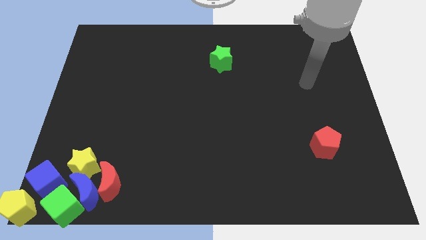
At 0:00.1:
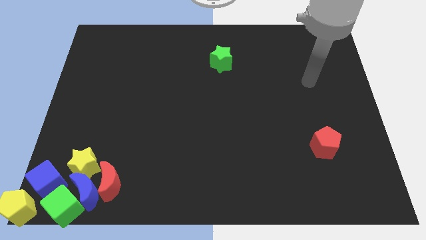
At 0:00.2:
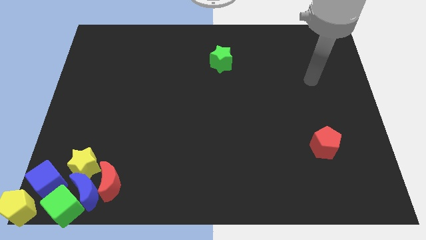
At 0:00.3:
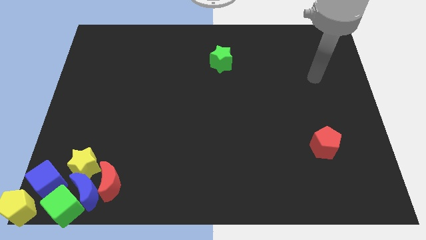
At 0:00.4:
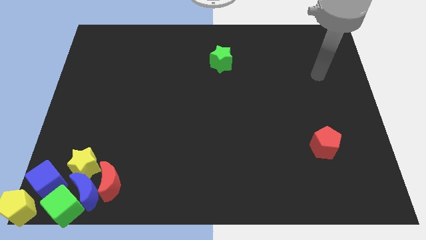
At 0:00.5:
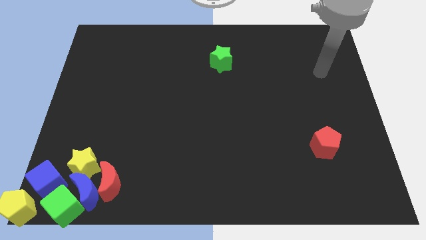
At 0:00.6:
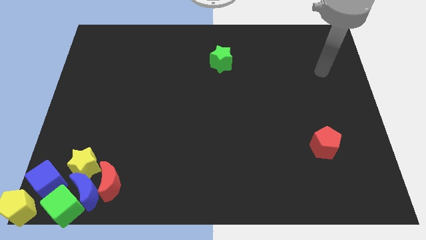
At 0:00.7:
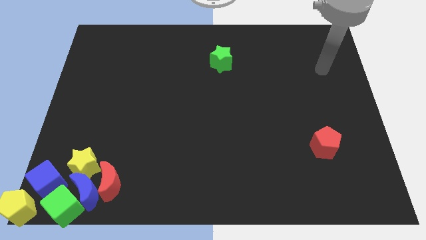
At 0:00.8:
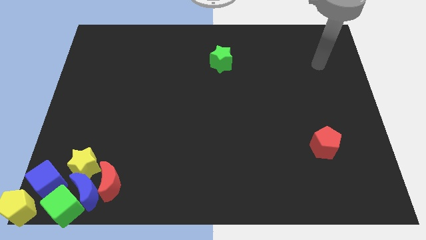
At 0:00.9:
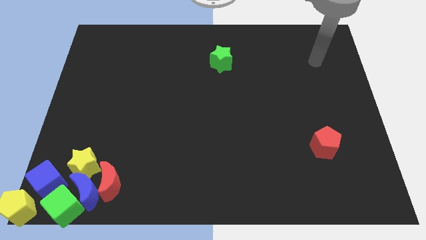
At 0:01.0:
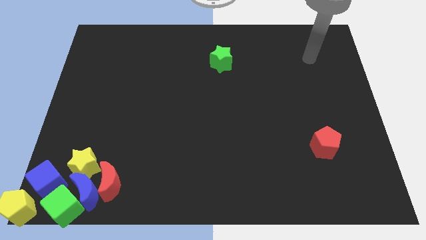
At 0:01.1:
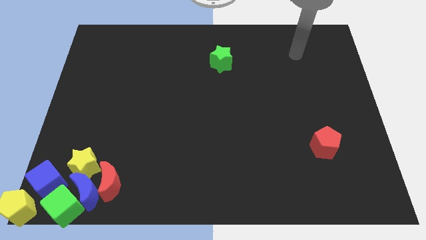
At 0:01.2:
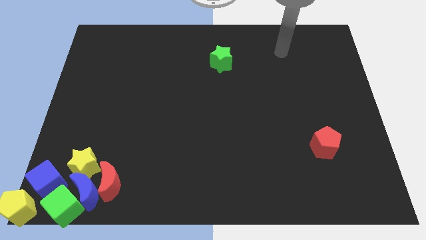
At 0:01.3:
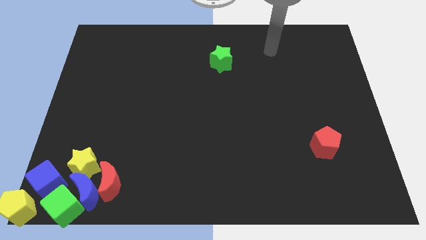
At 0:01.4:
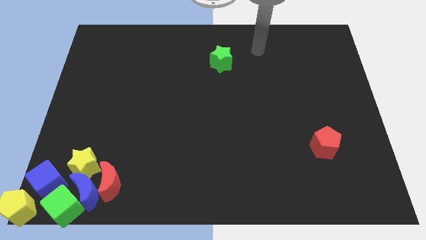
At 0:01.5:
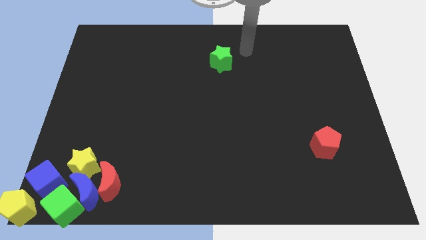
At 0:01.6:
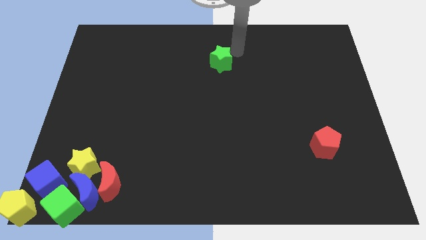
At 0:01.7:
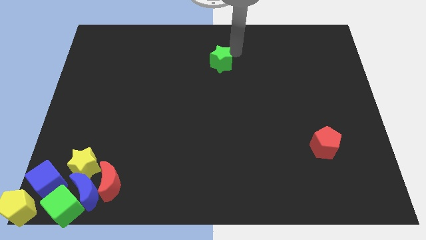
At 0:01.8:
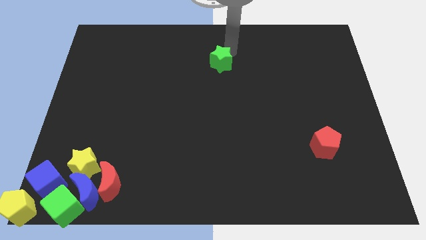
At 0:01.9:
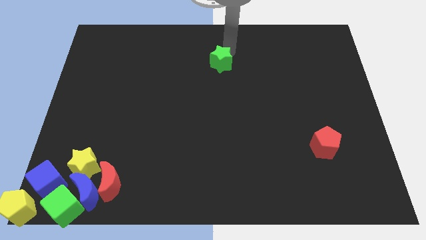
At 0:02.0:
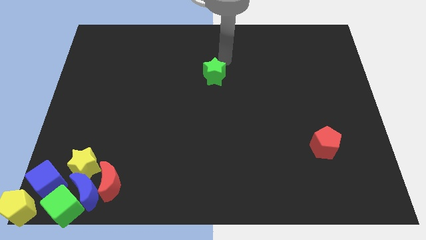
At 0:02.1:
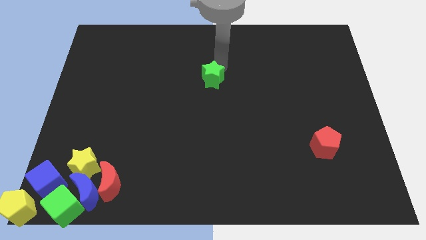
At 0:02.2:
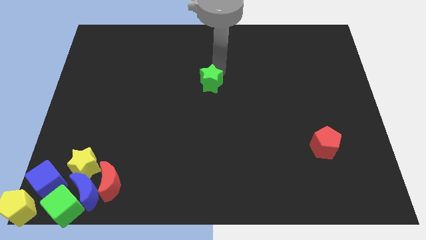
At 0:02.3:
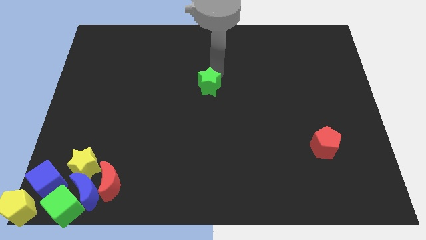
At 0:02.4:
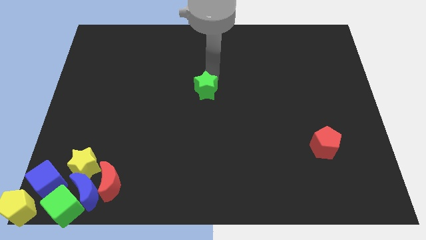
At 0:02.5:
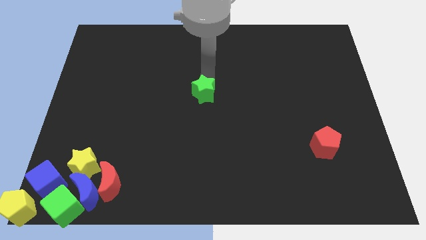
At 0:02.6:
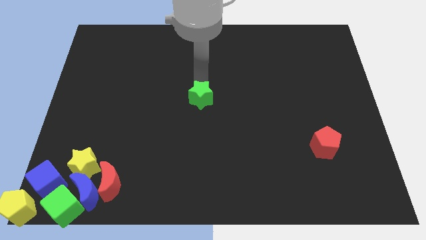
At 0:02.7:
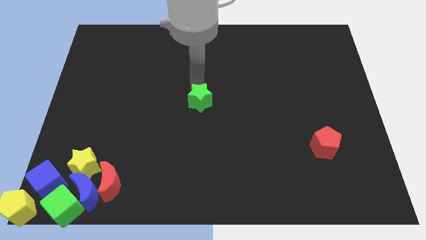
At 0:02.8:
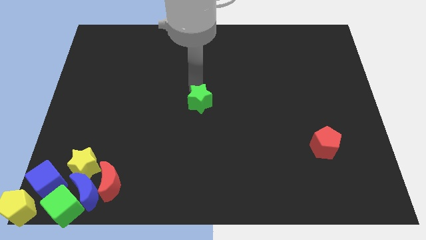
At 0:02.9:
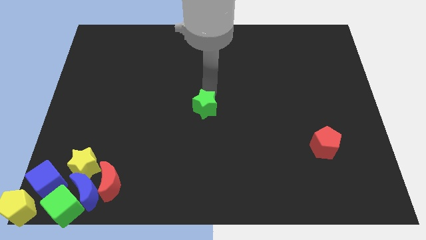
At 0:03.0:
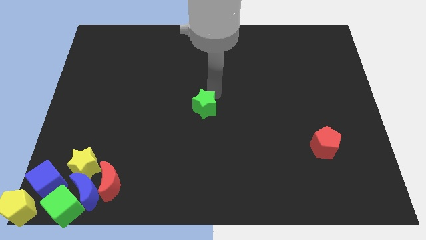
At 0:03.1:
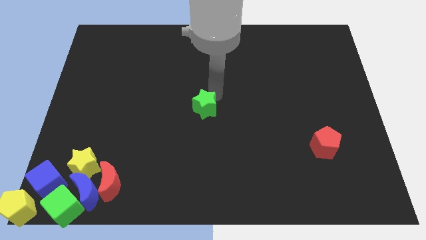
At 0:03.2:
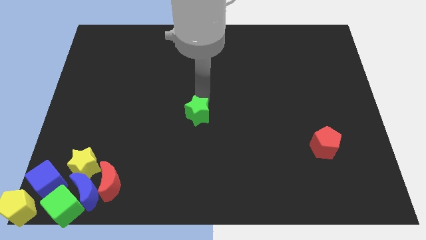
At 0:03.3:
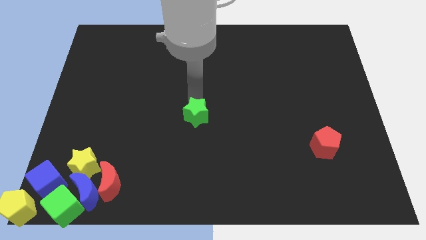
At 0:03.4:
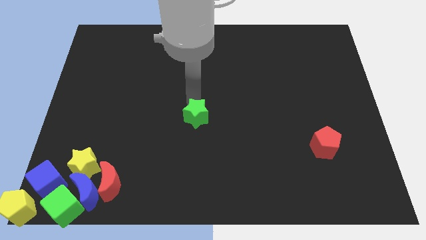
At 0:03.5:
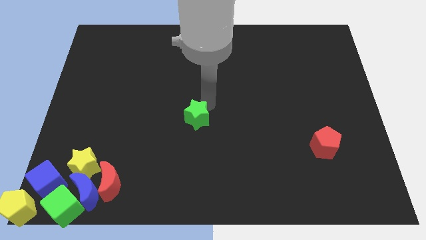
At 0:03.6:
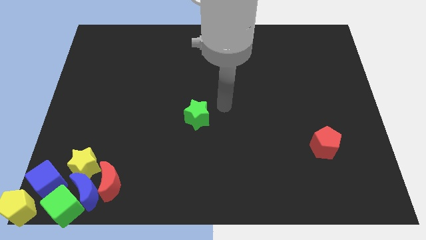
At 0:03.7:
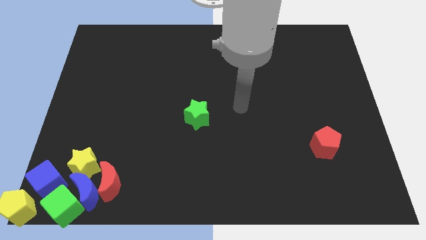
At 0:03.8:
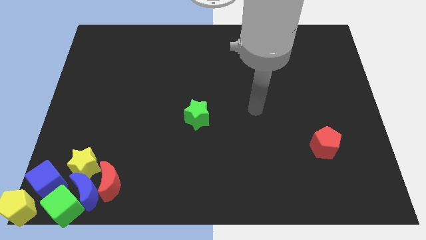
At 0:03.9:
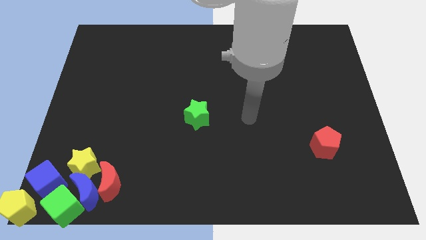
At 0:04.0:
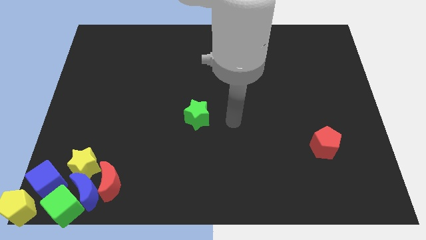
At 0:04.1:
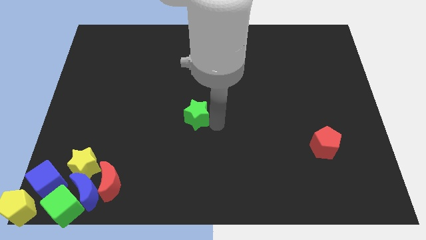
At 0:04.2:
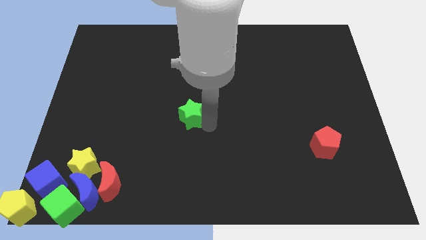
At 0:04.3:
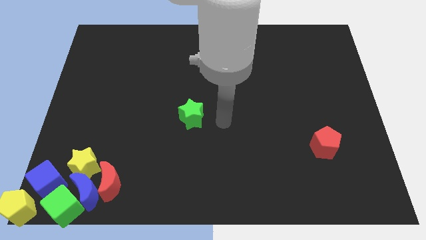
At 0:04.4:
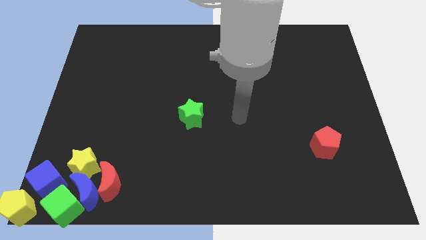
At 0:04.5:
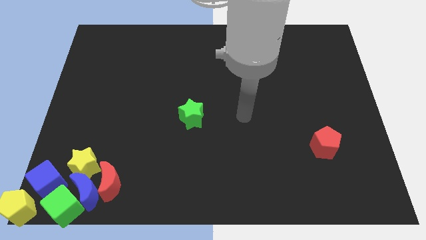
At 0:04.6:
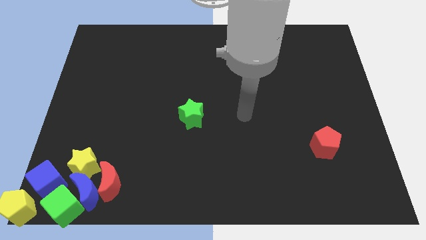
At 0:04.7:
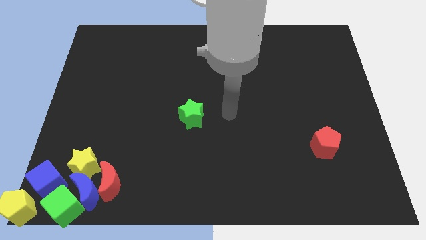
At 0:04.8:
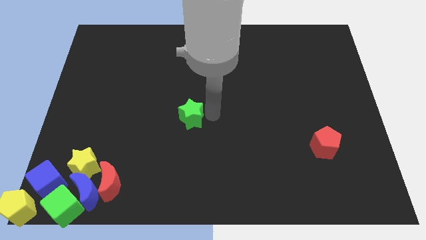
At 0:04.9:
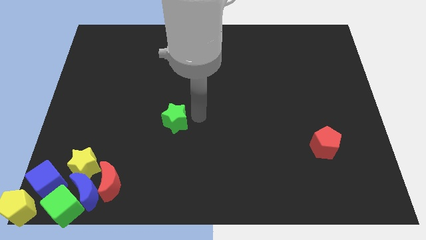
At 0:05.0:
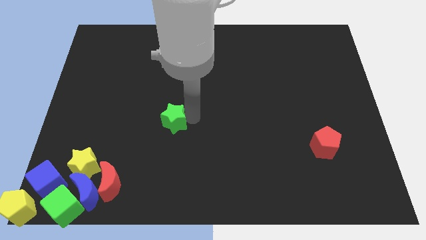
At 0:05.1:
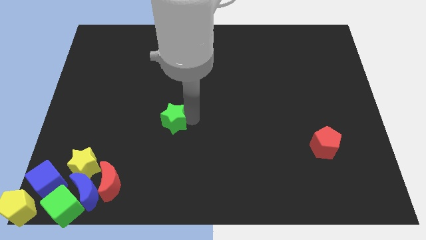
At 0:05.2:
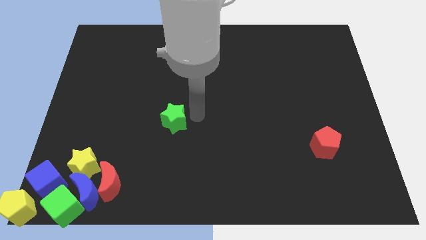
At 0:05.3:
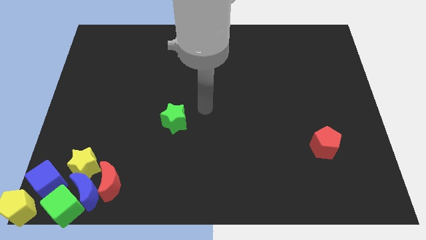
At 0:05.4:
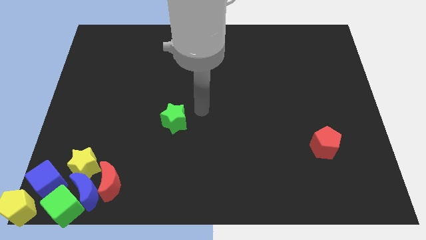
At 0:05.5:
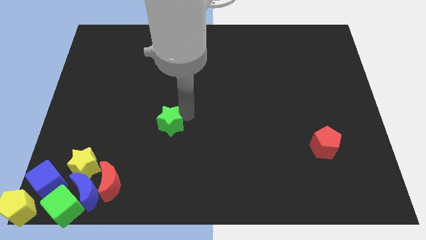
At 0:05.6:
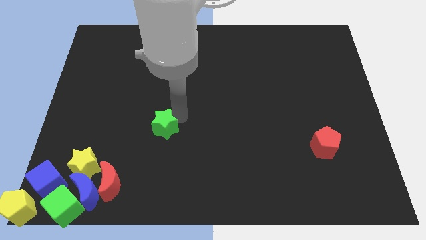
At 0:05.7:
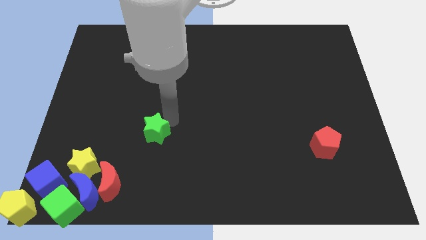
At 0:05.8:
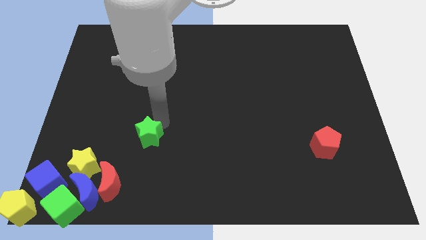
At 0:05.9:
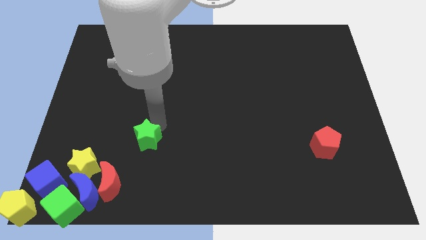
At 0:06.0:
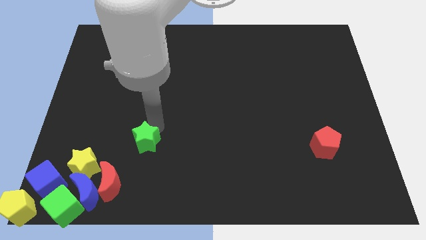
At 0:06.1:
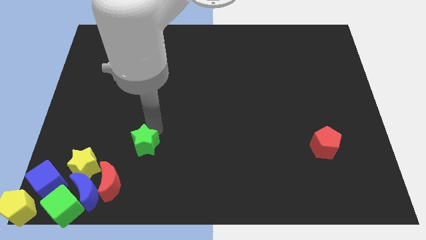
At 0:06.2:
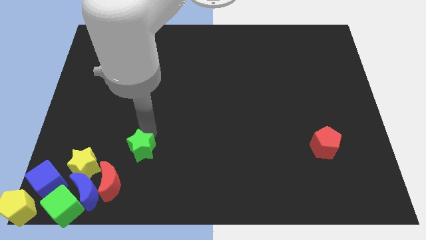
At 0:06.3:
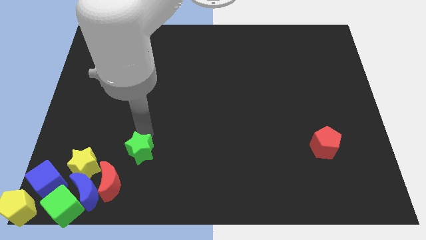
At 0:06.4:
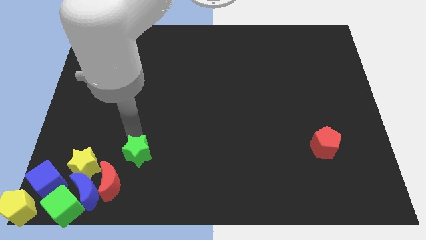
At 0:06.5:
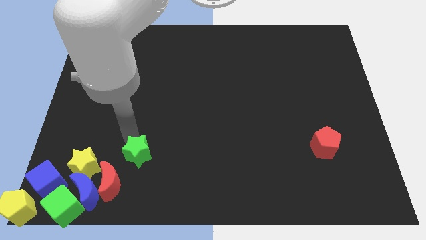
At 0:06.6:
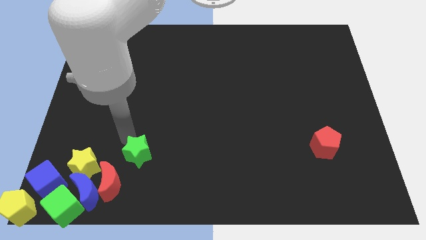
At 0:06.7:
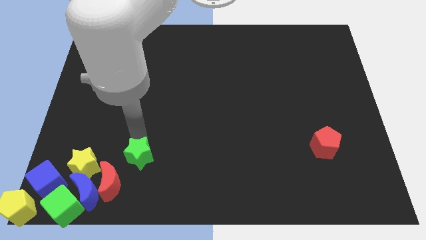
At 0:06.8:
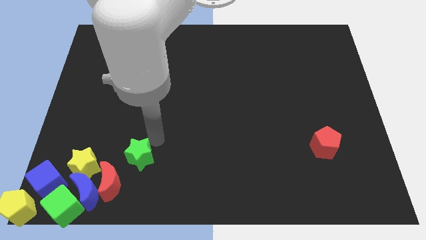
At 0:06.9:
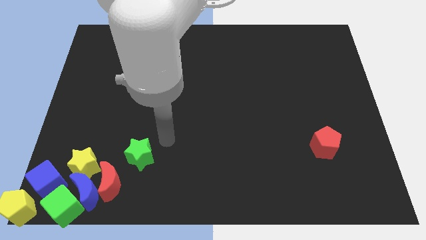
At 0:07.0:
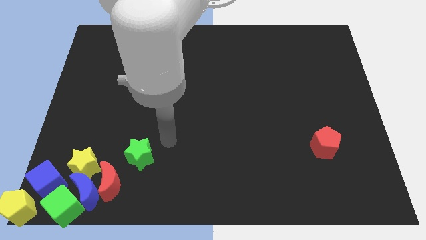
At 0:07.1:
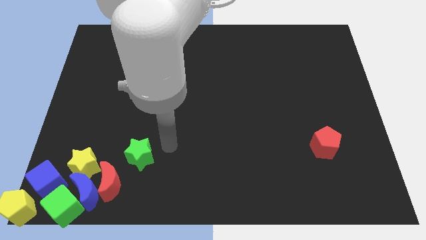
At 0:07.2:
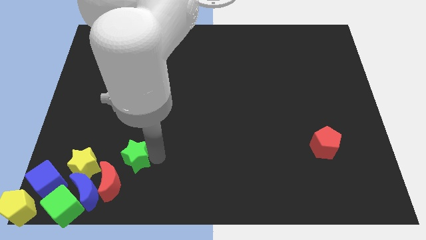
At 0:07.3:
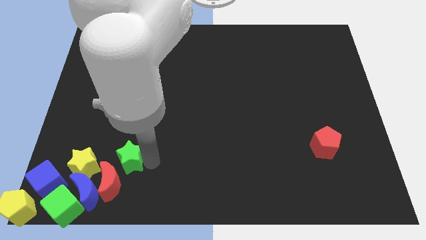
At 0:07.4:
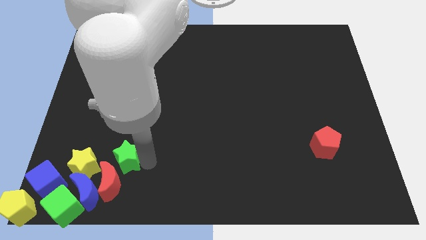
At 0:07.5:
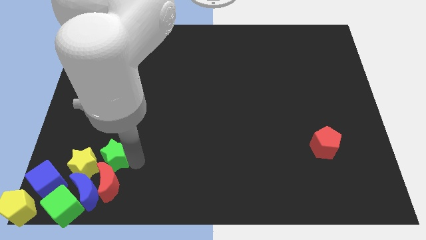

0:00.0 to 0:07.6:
push the green star into the red crescent

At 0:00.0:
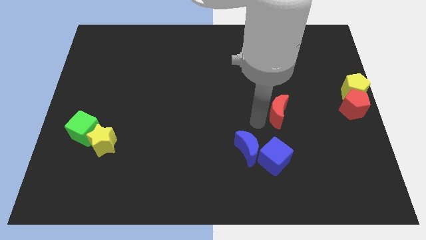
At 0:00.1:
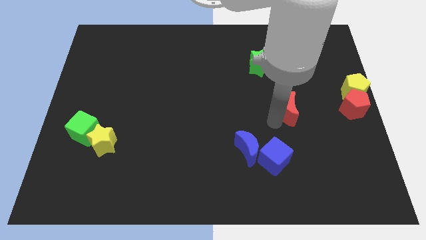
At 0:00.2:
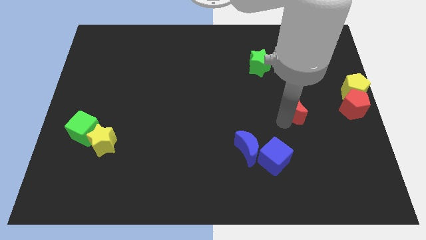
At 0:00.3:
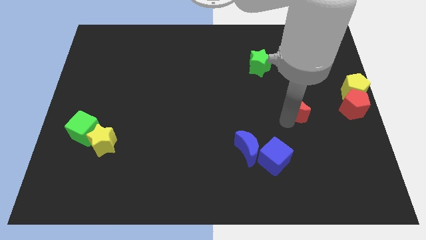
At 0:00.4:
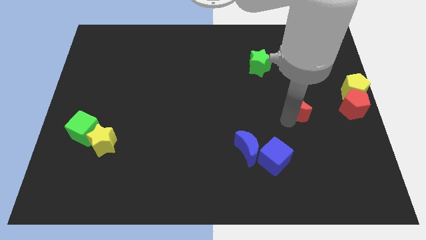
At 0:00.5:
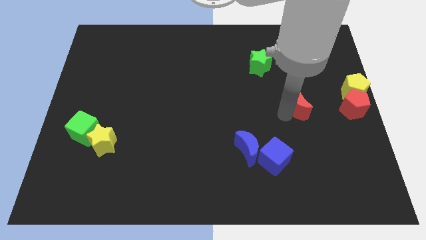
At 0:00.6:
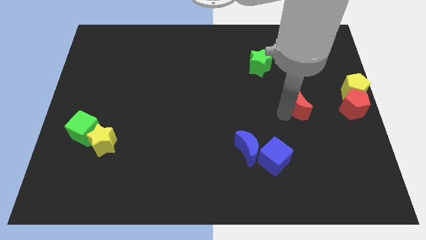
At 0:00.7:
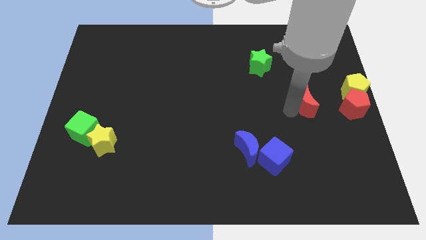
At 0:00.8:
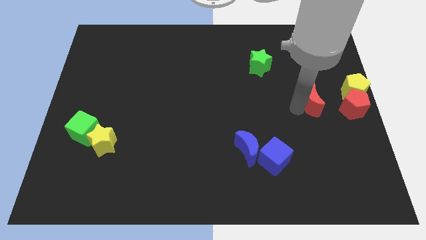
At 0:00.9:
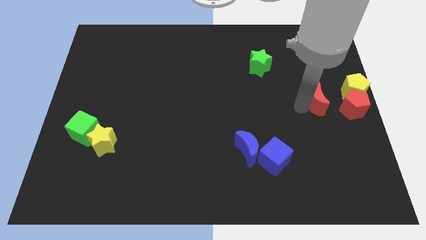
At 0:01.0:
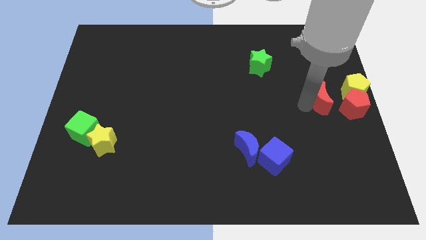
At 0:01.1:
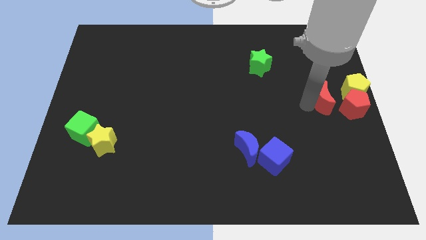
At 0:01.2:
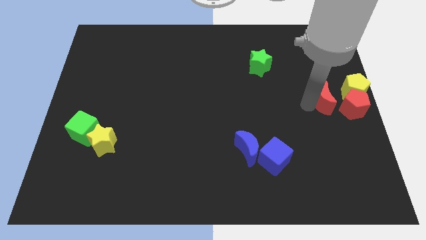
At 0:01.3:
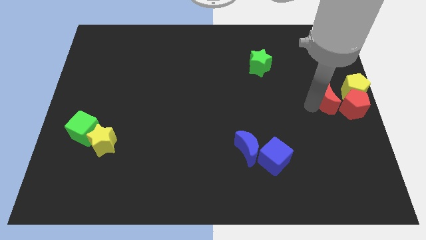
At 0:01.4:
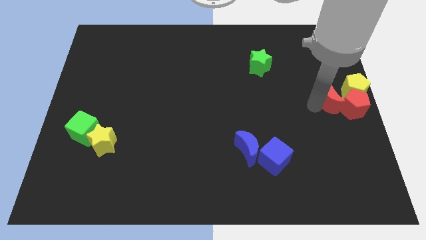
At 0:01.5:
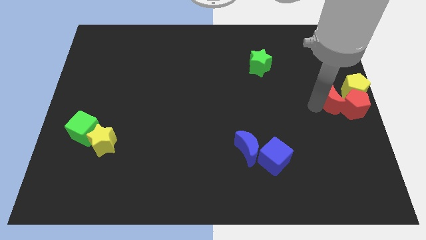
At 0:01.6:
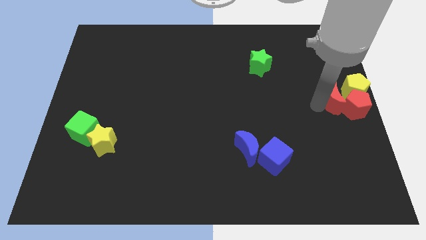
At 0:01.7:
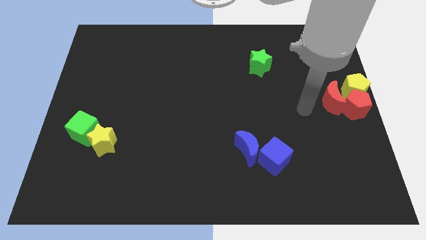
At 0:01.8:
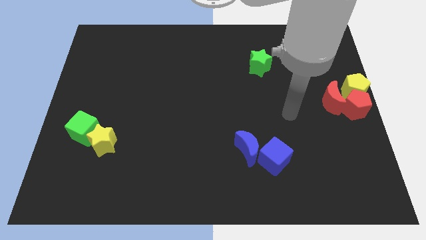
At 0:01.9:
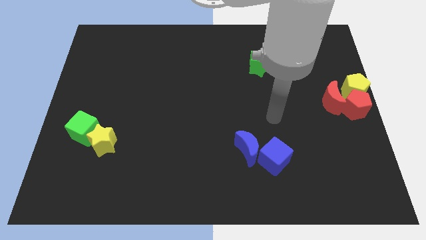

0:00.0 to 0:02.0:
move the red crescent towards the red pentagon
